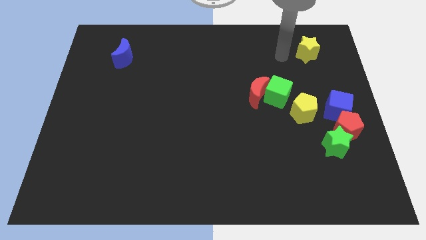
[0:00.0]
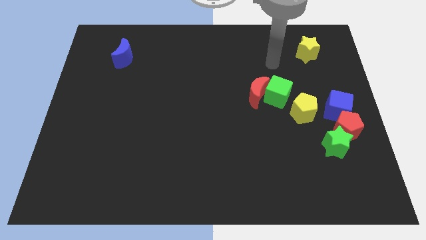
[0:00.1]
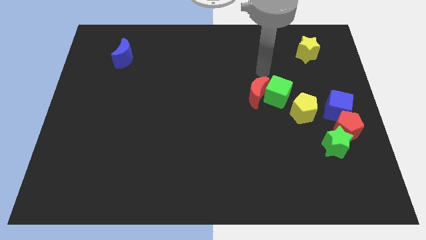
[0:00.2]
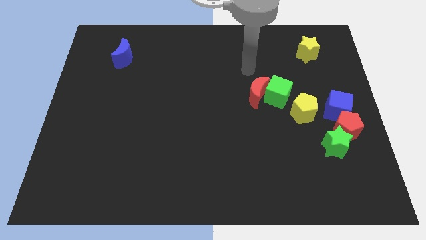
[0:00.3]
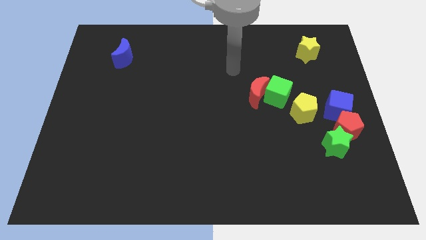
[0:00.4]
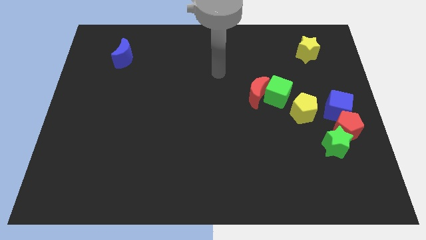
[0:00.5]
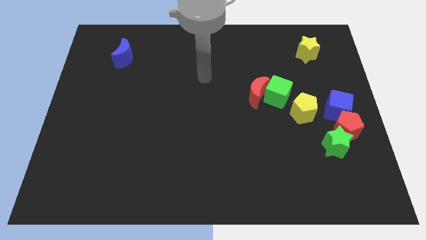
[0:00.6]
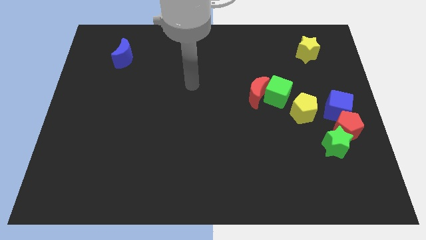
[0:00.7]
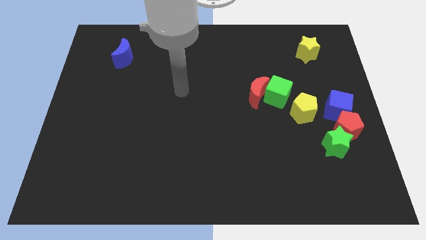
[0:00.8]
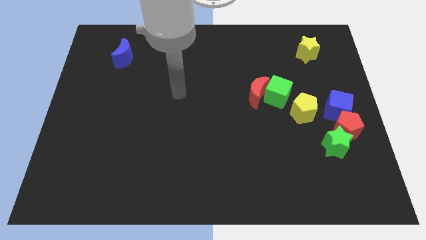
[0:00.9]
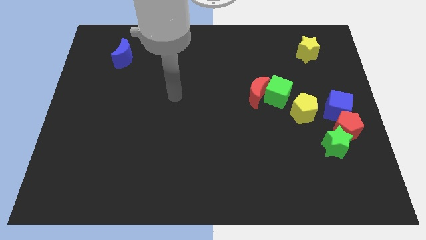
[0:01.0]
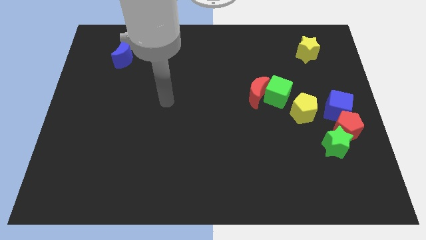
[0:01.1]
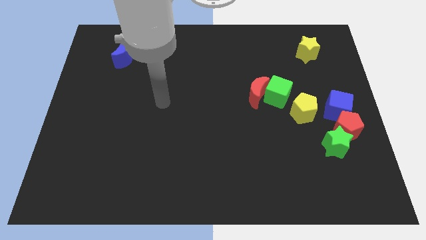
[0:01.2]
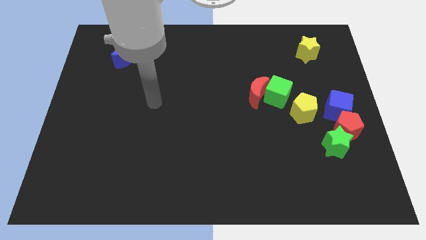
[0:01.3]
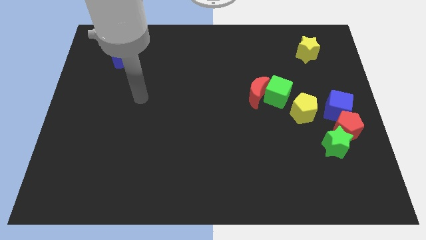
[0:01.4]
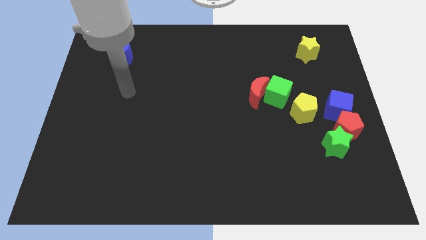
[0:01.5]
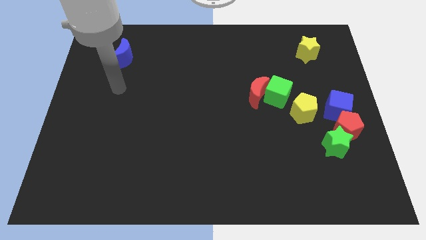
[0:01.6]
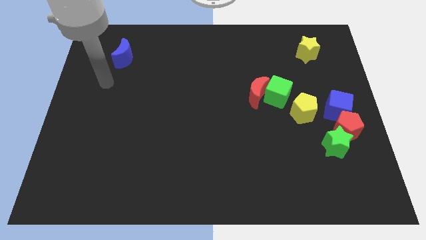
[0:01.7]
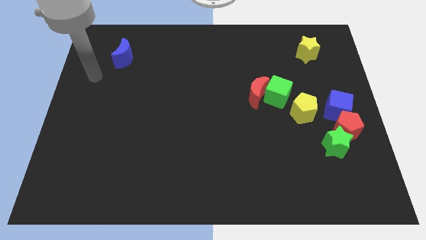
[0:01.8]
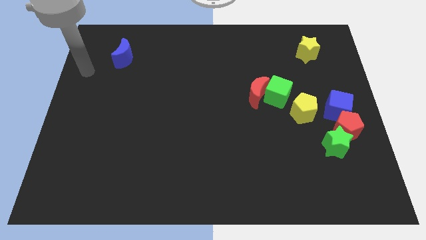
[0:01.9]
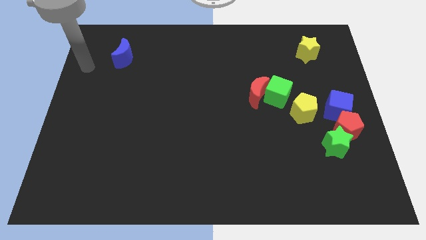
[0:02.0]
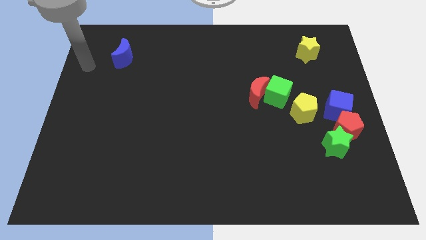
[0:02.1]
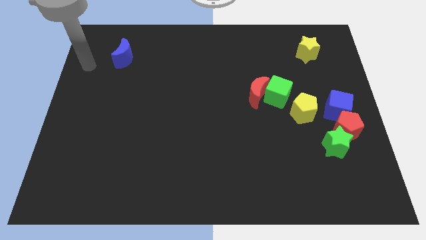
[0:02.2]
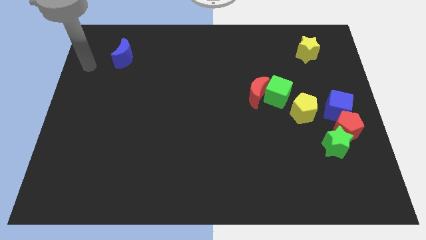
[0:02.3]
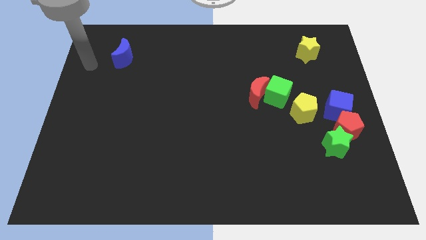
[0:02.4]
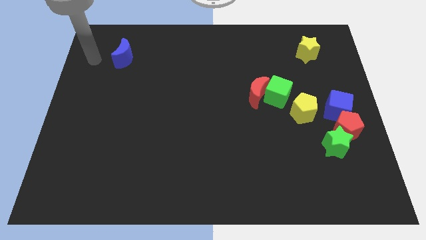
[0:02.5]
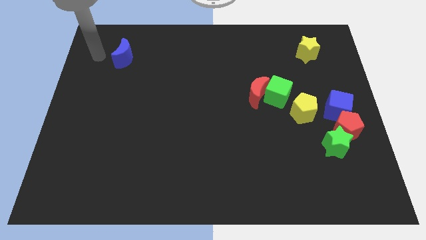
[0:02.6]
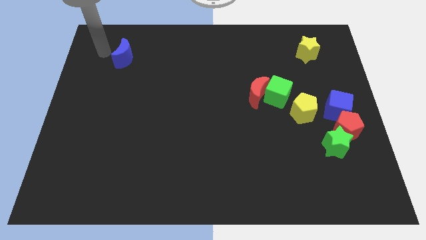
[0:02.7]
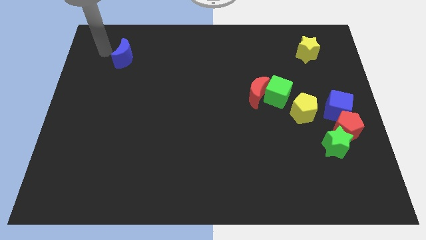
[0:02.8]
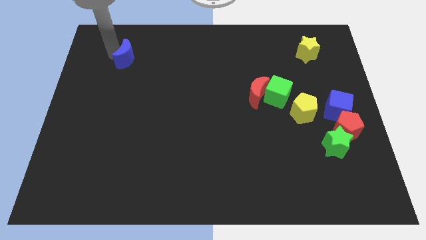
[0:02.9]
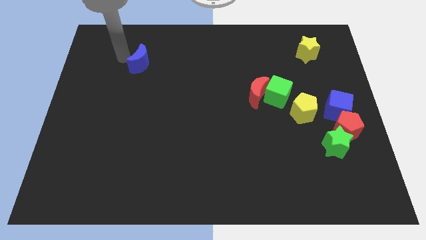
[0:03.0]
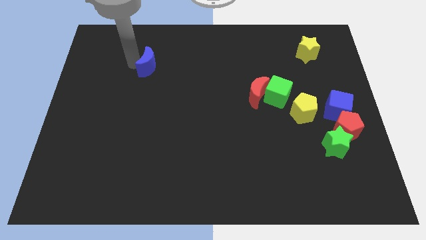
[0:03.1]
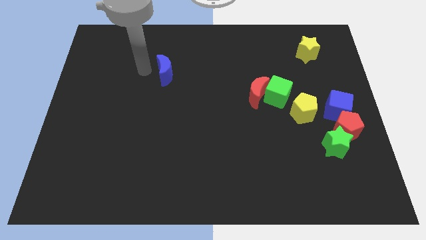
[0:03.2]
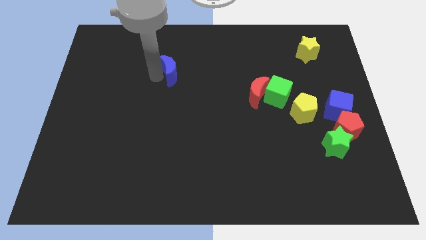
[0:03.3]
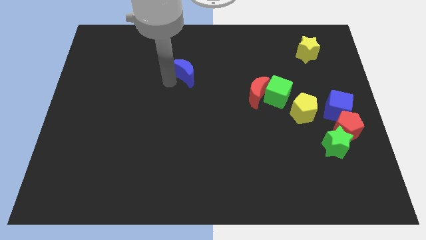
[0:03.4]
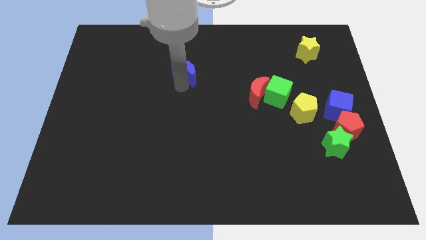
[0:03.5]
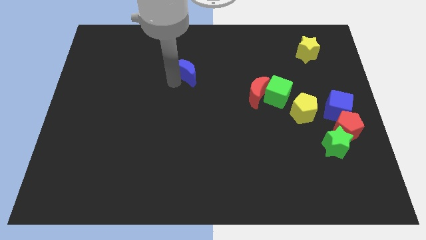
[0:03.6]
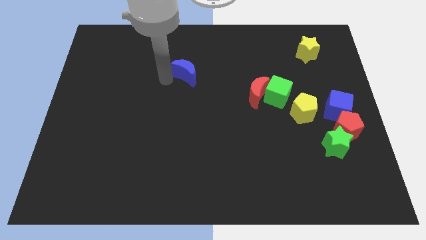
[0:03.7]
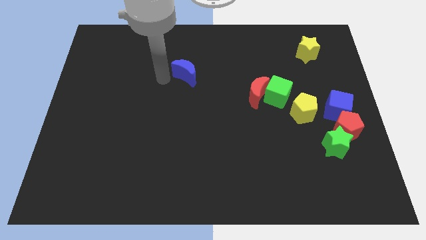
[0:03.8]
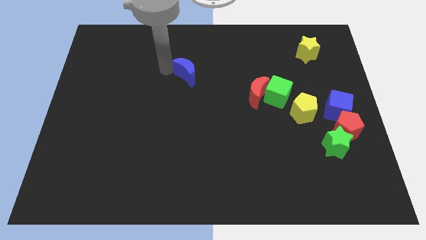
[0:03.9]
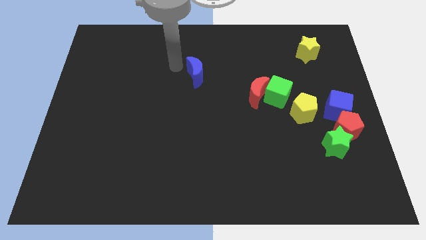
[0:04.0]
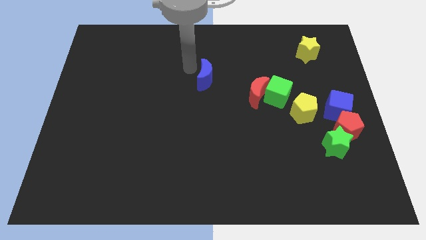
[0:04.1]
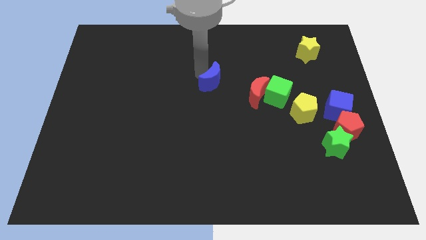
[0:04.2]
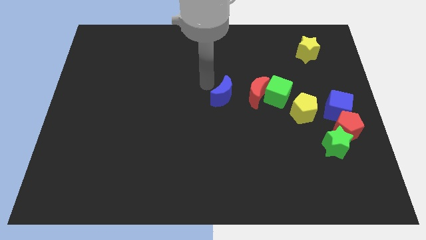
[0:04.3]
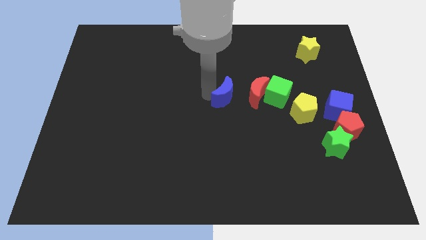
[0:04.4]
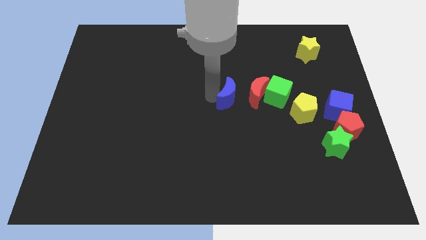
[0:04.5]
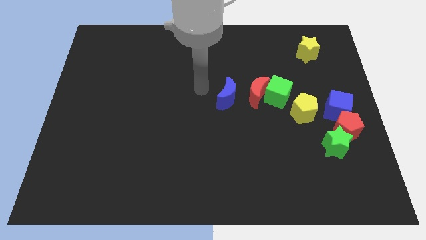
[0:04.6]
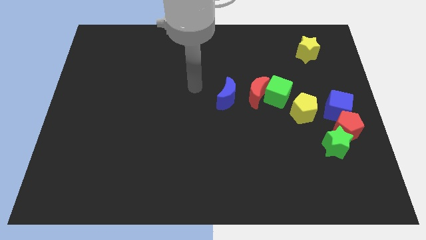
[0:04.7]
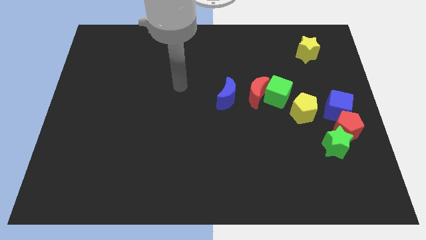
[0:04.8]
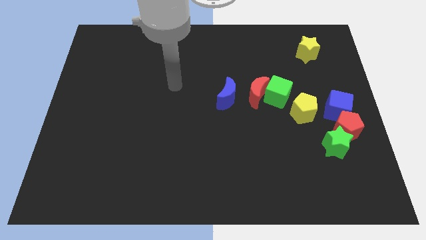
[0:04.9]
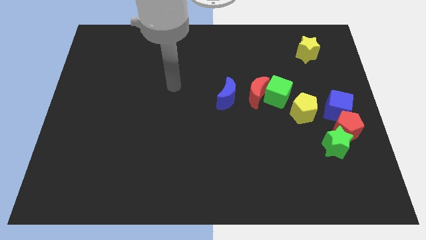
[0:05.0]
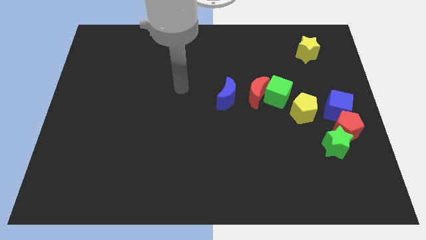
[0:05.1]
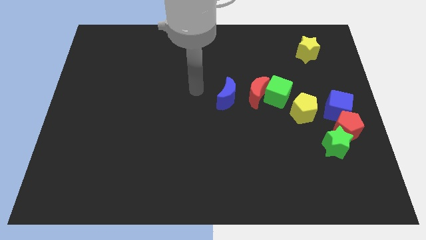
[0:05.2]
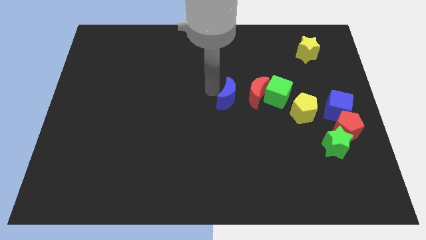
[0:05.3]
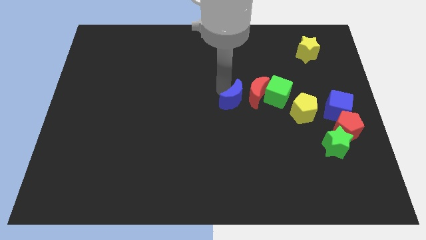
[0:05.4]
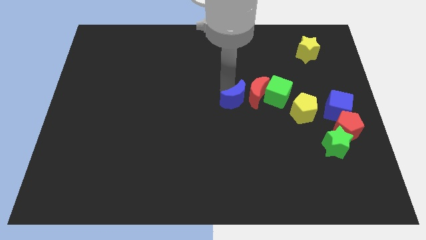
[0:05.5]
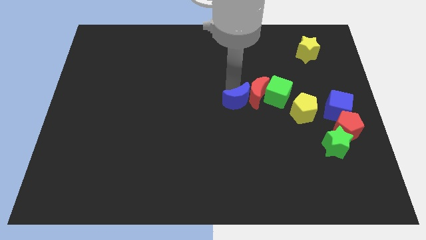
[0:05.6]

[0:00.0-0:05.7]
move the blue crescent to the left of the red crescent

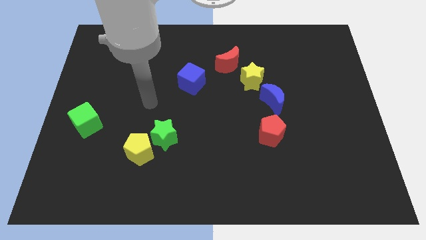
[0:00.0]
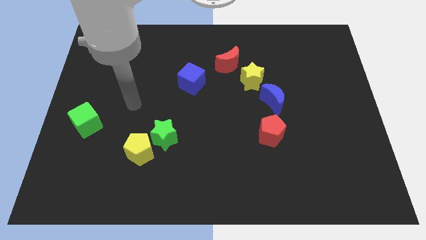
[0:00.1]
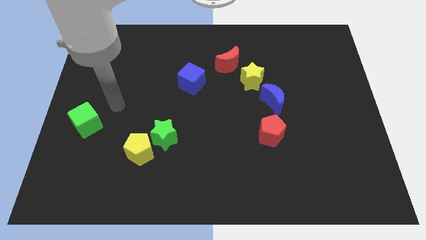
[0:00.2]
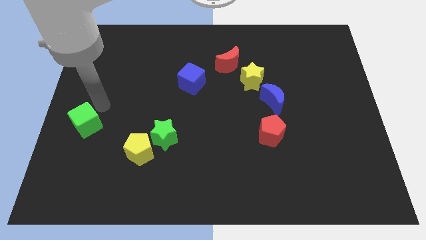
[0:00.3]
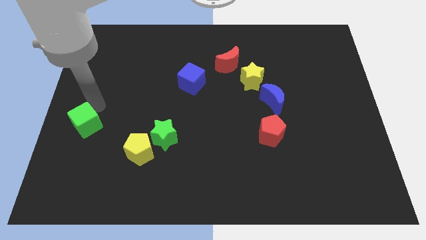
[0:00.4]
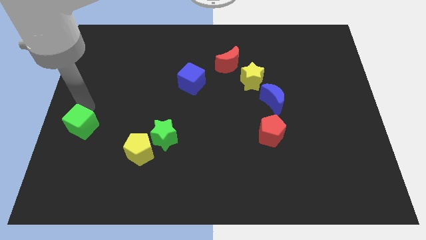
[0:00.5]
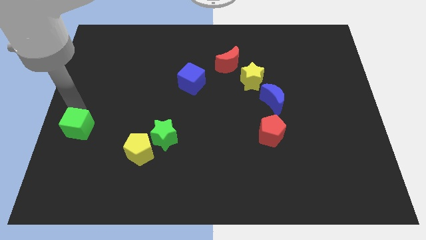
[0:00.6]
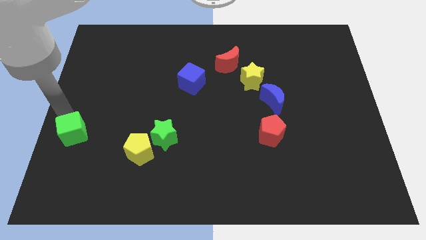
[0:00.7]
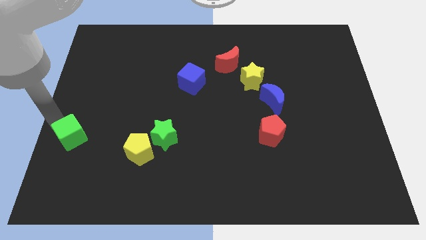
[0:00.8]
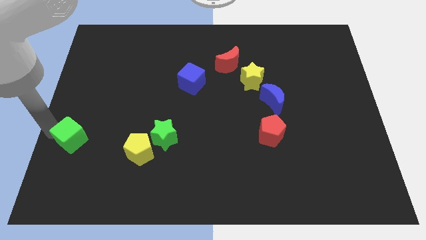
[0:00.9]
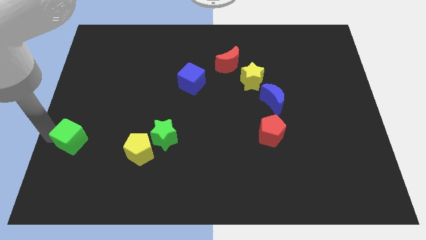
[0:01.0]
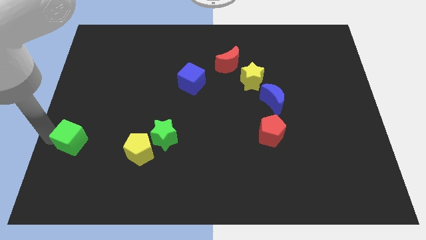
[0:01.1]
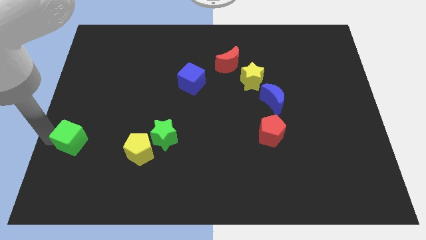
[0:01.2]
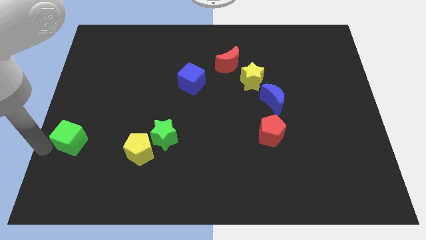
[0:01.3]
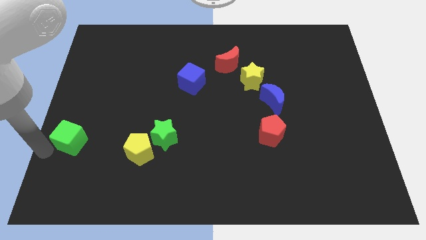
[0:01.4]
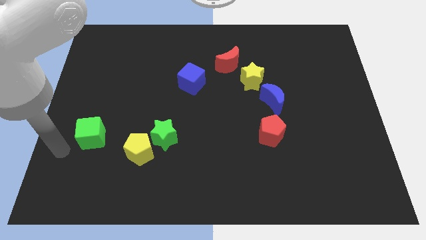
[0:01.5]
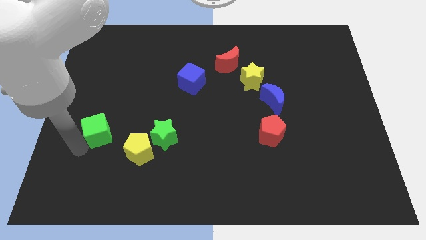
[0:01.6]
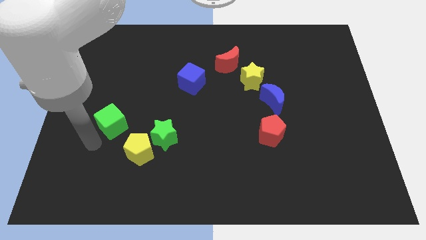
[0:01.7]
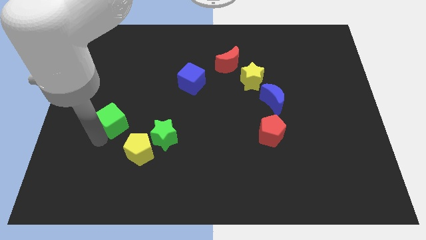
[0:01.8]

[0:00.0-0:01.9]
push the green cube towards blue cube

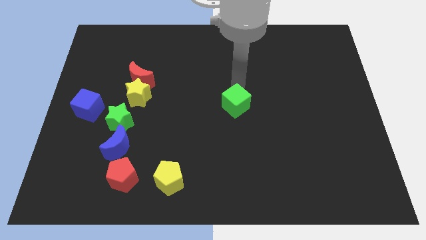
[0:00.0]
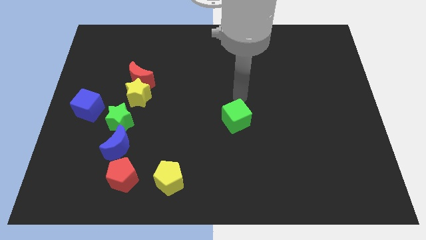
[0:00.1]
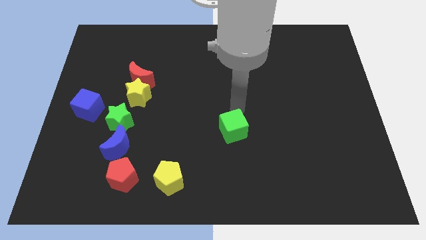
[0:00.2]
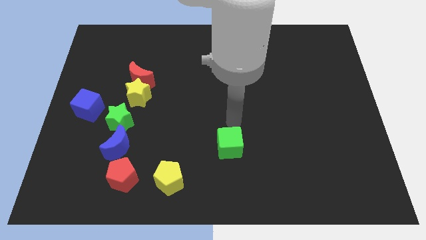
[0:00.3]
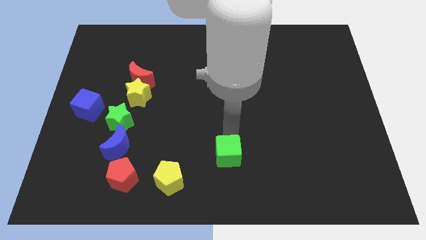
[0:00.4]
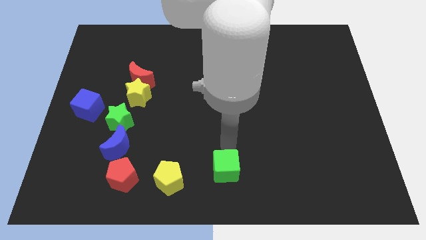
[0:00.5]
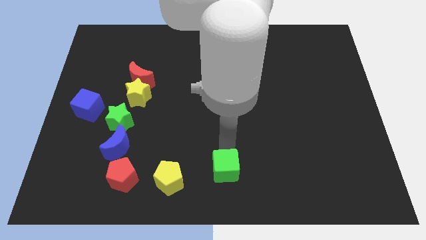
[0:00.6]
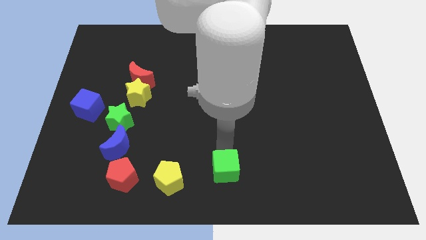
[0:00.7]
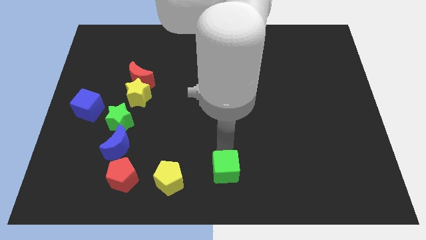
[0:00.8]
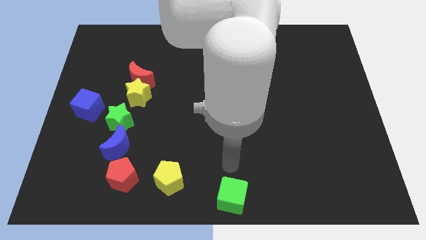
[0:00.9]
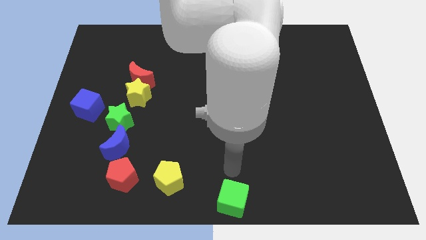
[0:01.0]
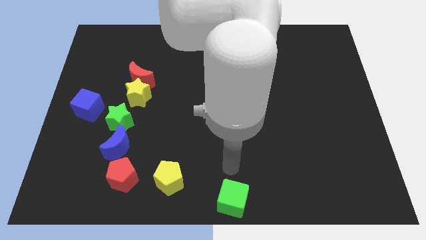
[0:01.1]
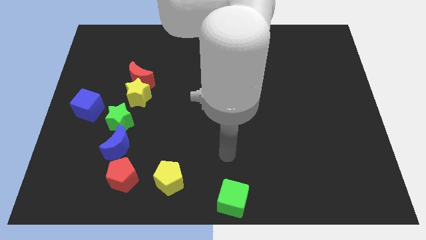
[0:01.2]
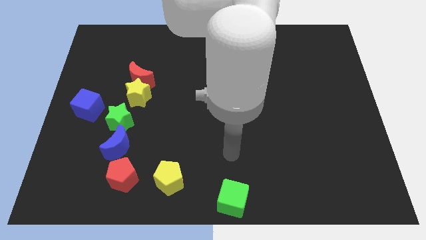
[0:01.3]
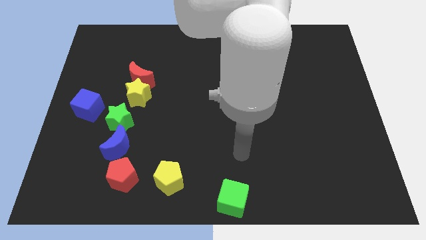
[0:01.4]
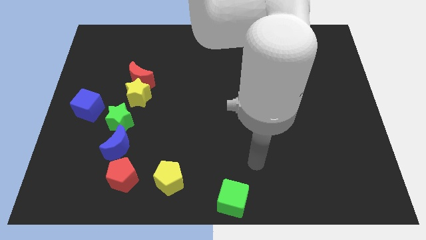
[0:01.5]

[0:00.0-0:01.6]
put the green cube diagonally bottom right to the yellow pentagon
